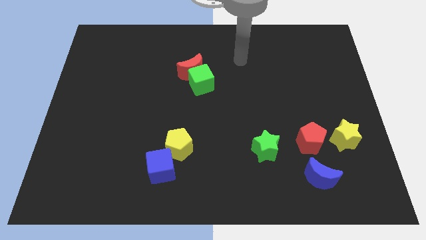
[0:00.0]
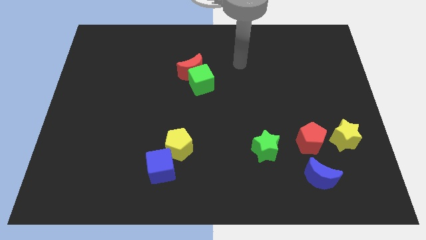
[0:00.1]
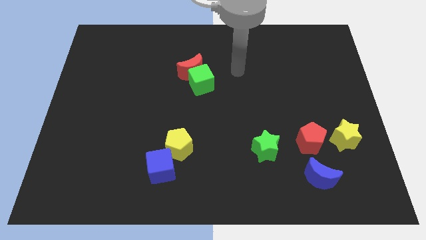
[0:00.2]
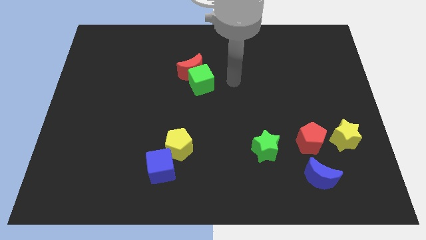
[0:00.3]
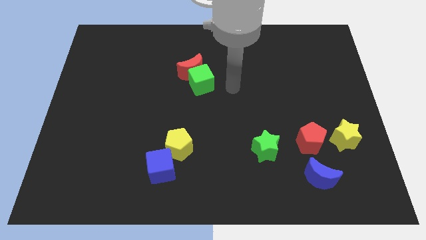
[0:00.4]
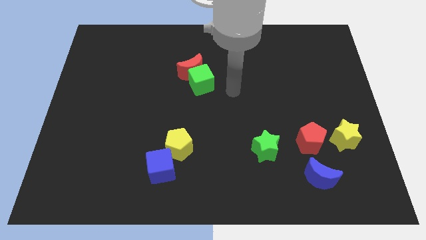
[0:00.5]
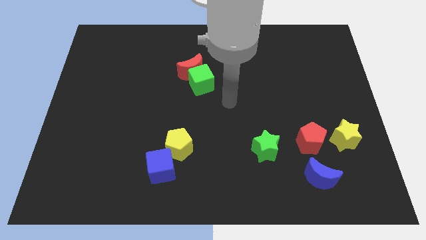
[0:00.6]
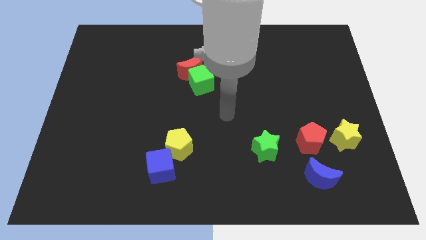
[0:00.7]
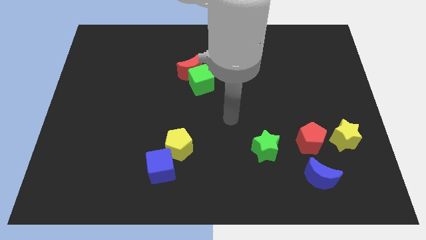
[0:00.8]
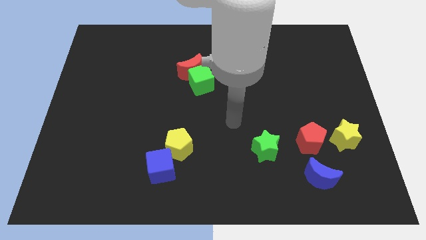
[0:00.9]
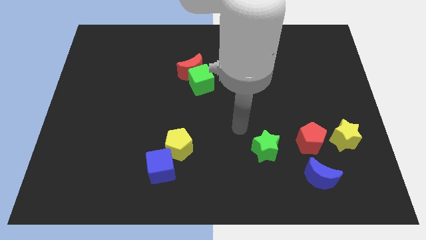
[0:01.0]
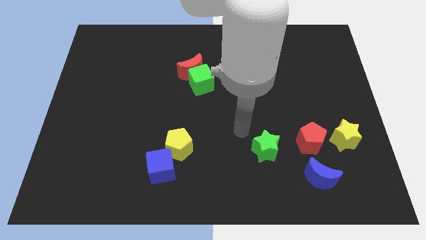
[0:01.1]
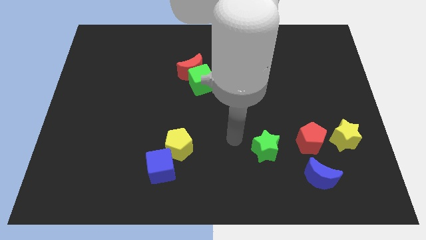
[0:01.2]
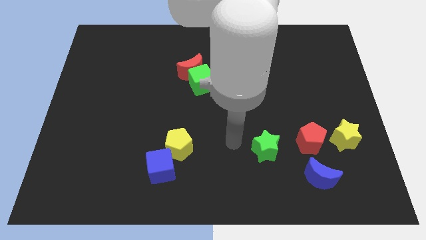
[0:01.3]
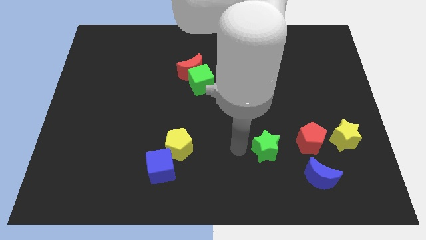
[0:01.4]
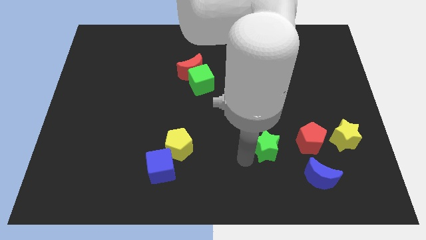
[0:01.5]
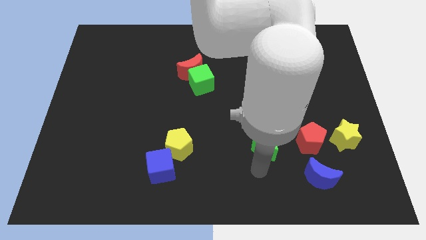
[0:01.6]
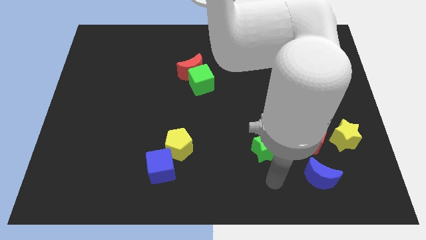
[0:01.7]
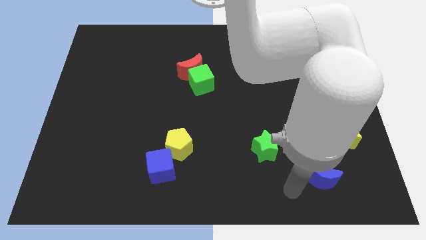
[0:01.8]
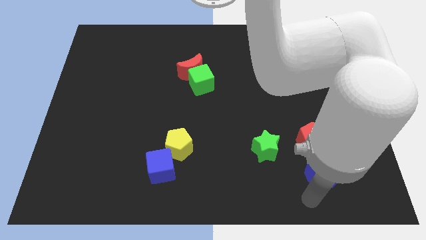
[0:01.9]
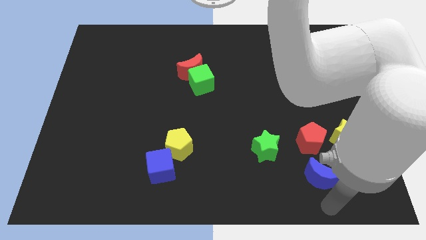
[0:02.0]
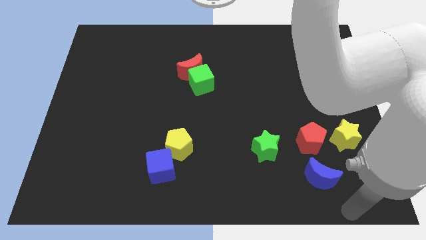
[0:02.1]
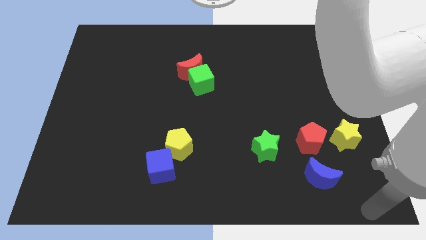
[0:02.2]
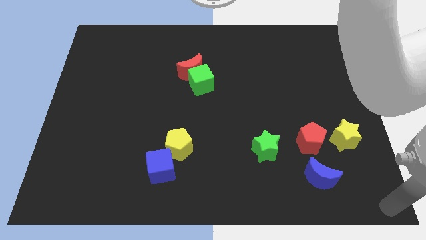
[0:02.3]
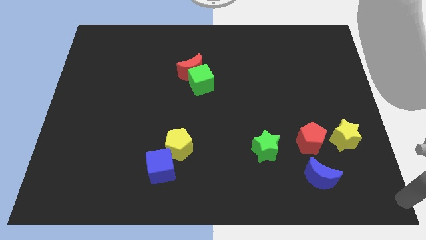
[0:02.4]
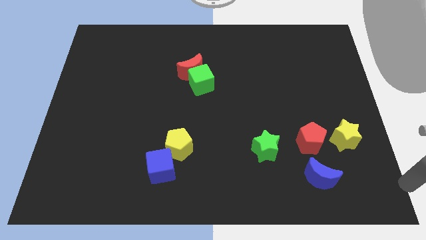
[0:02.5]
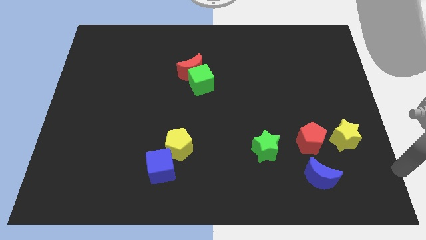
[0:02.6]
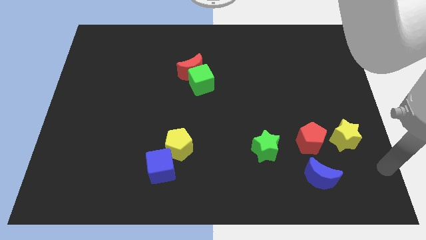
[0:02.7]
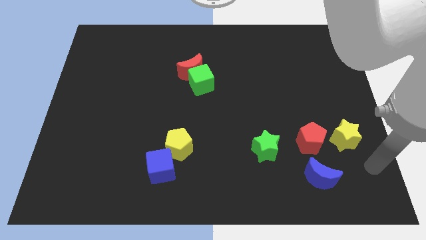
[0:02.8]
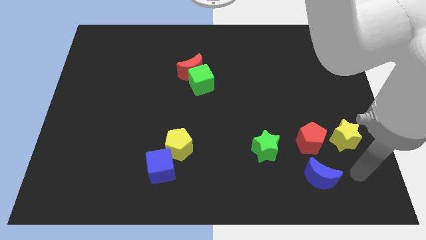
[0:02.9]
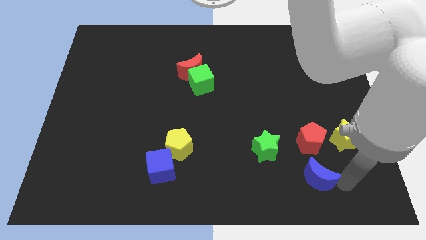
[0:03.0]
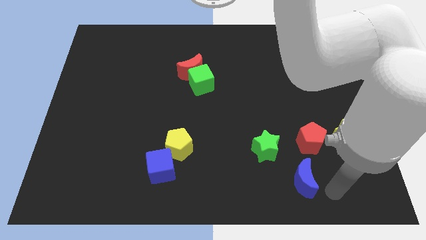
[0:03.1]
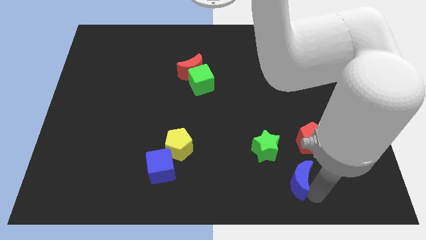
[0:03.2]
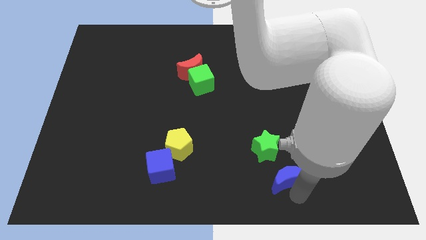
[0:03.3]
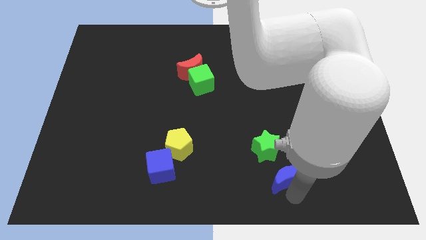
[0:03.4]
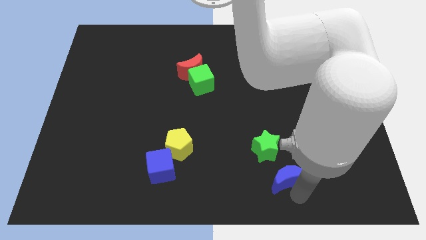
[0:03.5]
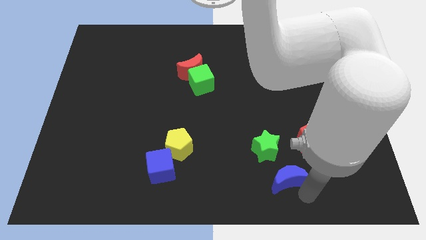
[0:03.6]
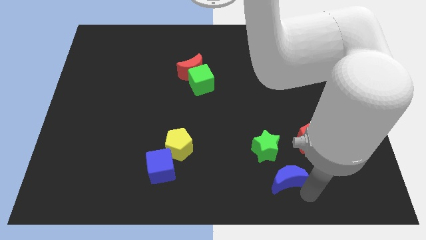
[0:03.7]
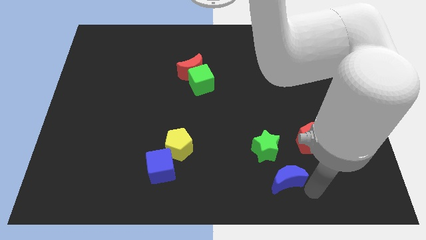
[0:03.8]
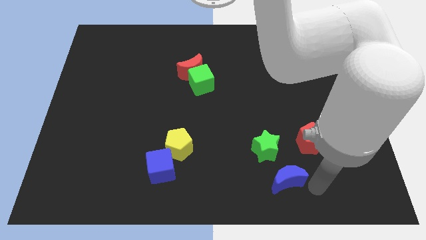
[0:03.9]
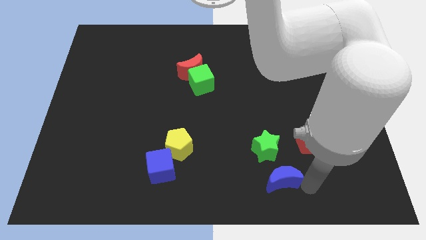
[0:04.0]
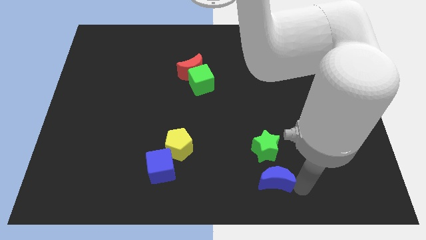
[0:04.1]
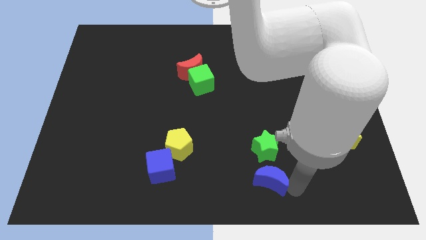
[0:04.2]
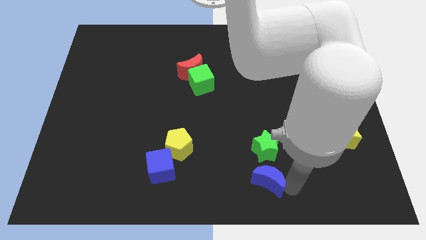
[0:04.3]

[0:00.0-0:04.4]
move the blue crescent to the bottom side of the green star

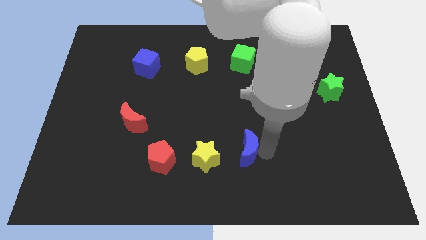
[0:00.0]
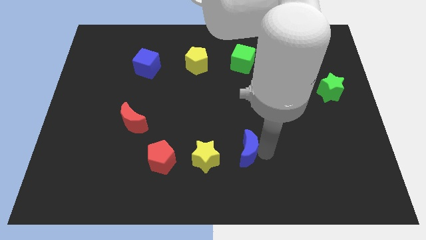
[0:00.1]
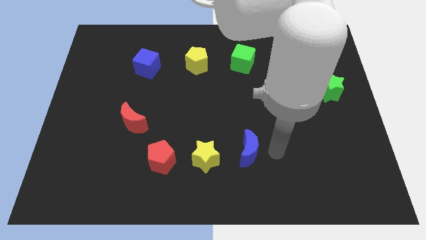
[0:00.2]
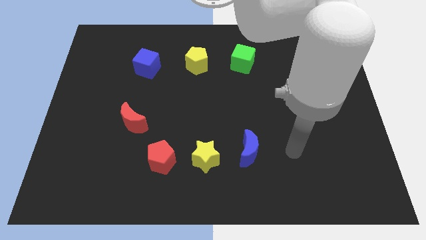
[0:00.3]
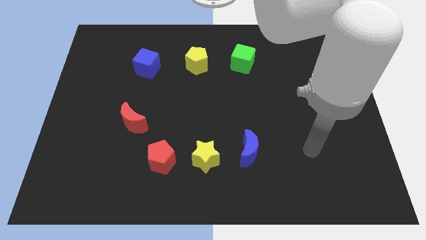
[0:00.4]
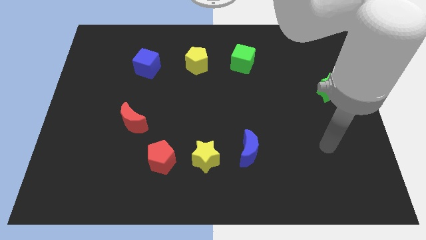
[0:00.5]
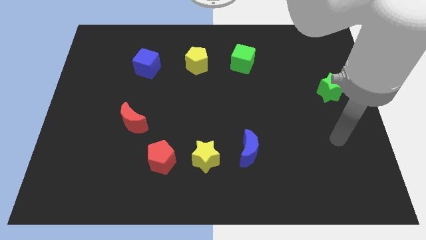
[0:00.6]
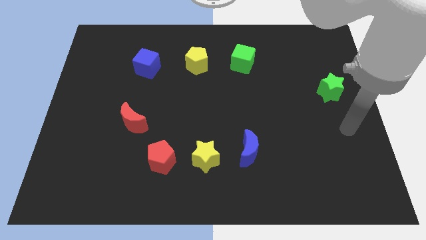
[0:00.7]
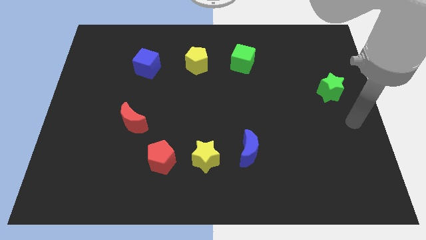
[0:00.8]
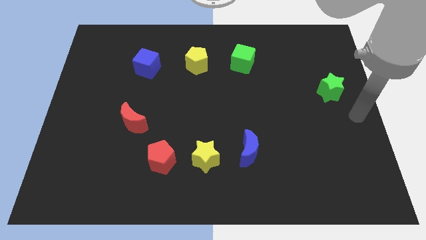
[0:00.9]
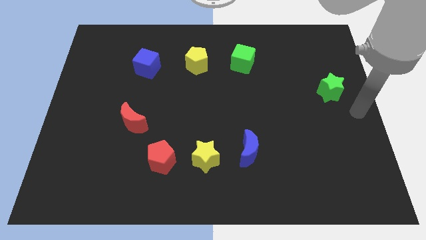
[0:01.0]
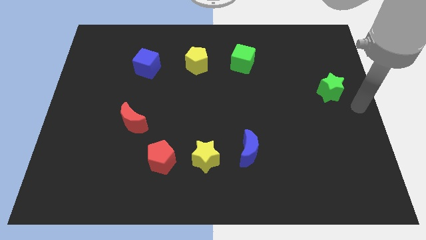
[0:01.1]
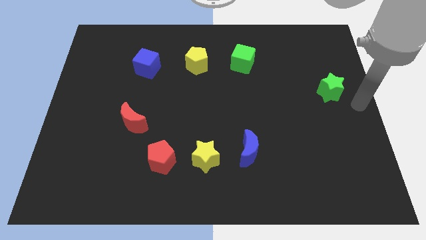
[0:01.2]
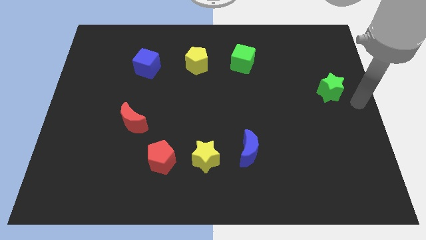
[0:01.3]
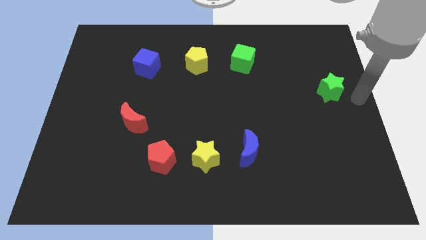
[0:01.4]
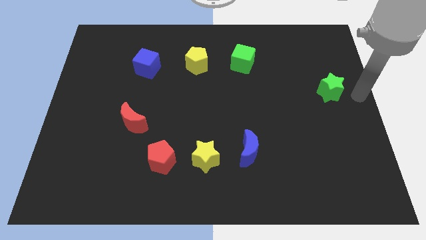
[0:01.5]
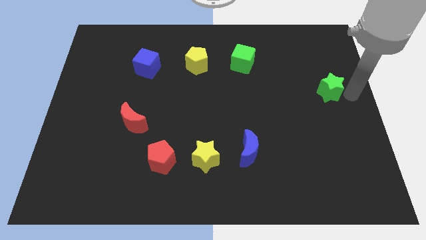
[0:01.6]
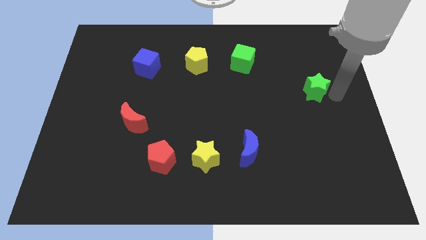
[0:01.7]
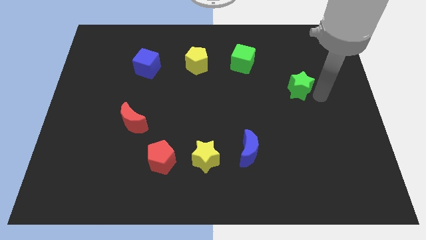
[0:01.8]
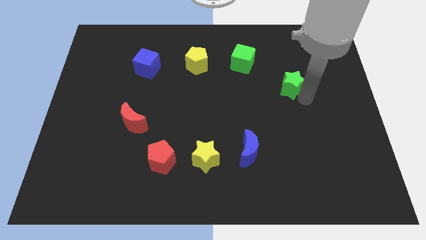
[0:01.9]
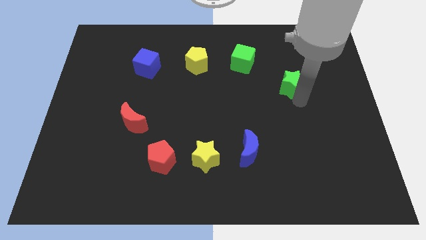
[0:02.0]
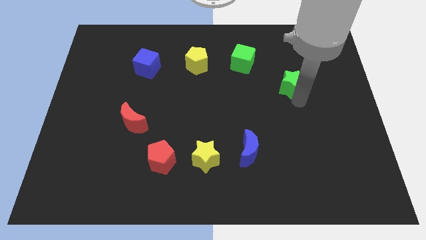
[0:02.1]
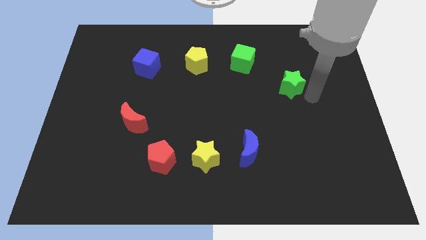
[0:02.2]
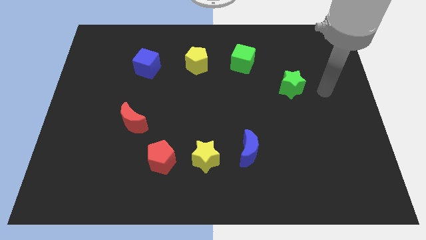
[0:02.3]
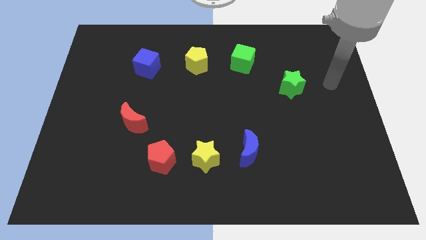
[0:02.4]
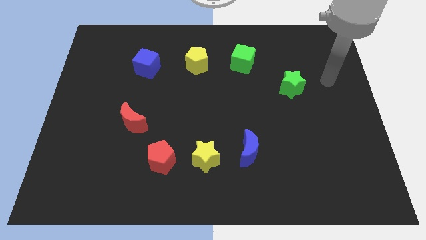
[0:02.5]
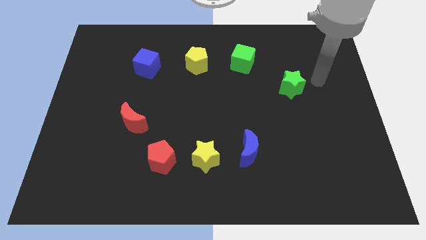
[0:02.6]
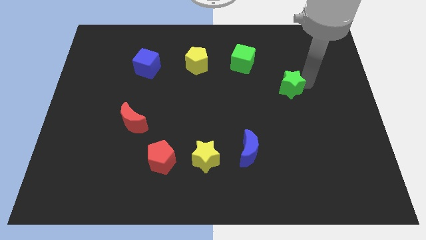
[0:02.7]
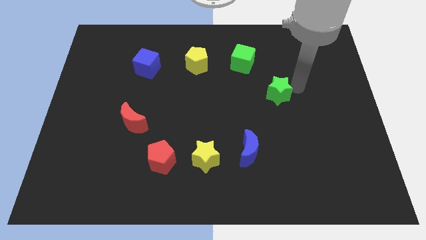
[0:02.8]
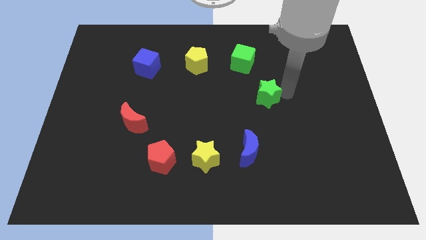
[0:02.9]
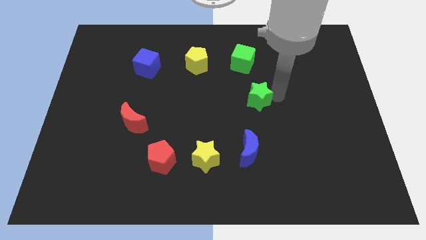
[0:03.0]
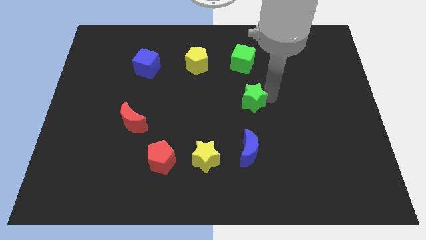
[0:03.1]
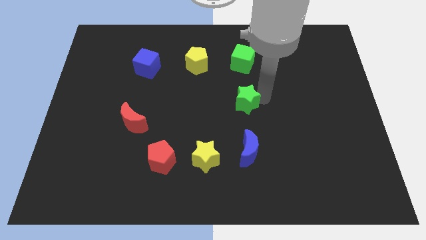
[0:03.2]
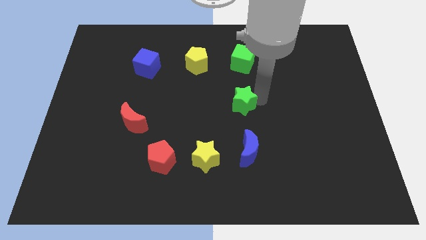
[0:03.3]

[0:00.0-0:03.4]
place the green star in between the green cube and blue moon to form a circle

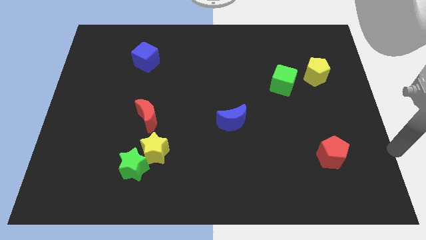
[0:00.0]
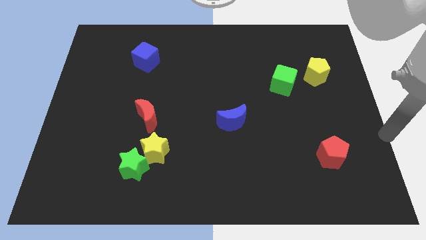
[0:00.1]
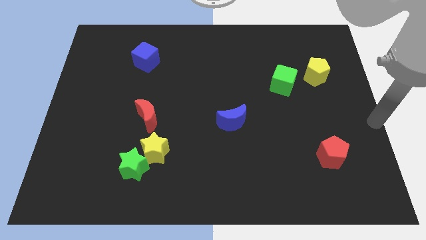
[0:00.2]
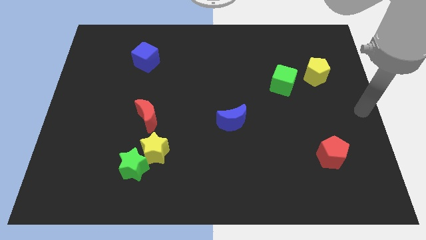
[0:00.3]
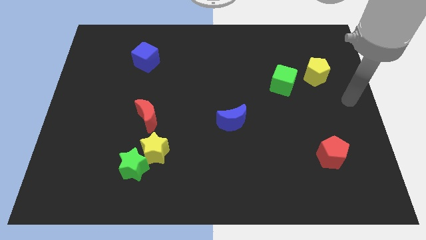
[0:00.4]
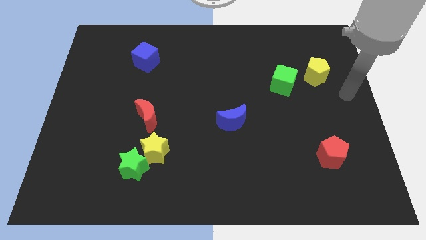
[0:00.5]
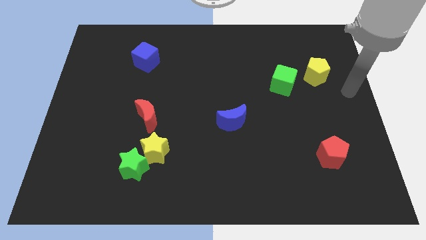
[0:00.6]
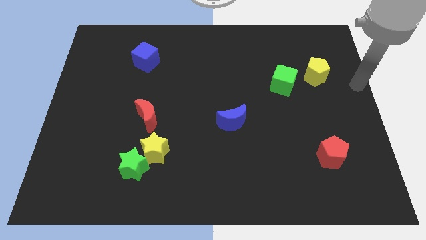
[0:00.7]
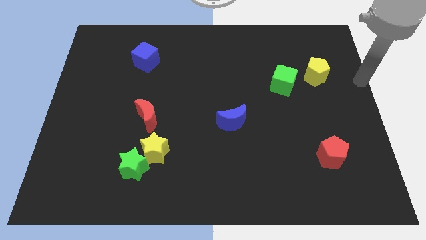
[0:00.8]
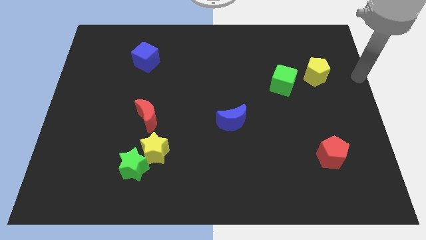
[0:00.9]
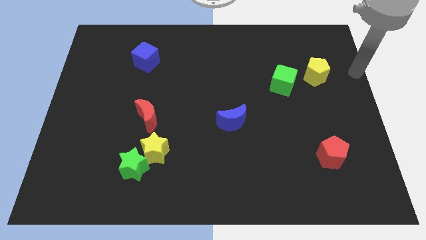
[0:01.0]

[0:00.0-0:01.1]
place your arm at the right side of the yellow pentagon
